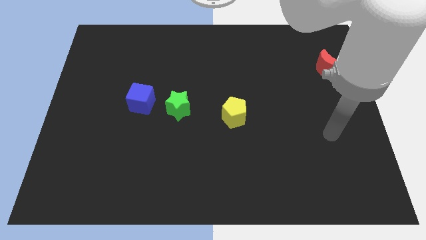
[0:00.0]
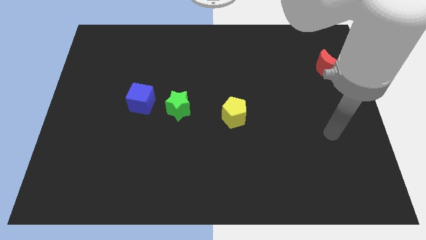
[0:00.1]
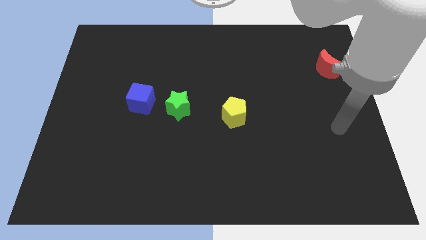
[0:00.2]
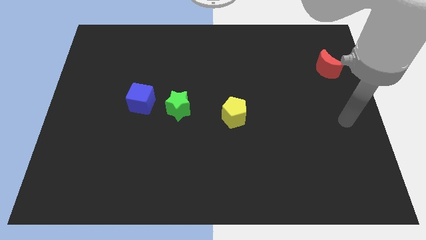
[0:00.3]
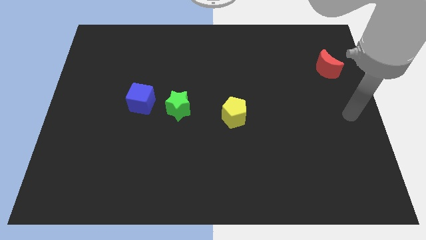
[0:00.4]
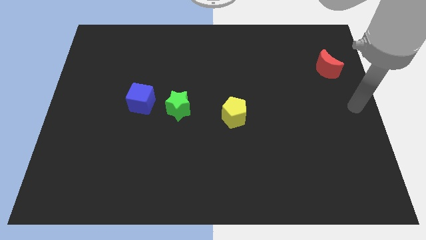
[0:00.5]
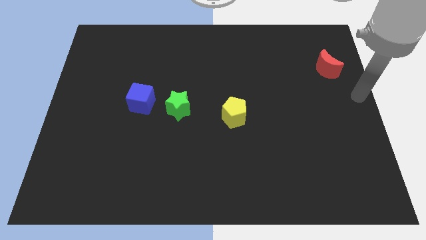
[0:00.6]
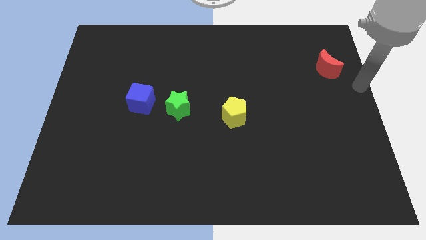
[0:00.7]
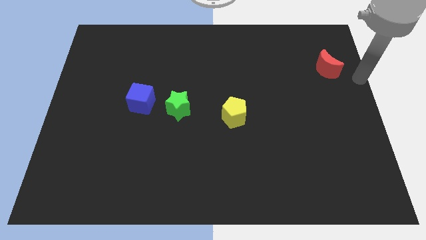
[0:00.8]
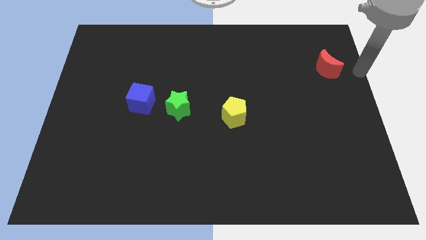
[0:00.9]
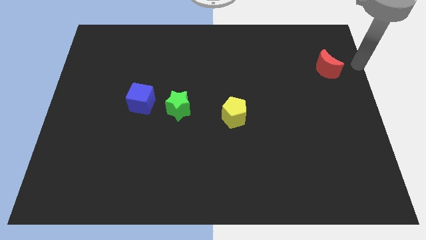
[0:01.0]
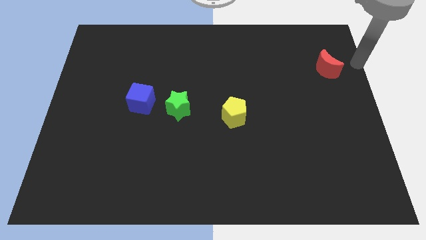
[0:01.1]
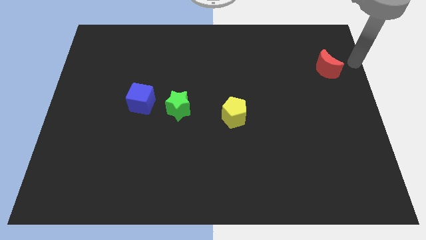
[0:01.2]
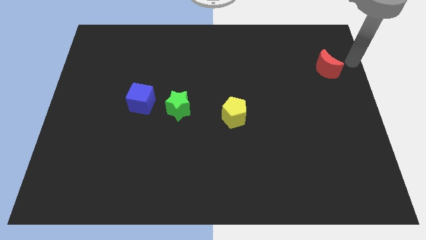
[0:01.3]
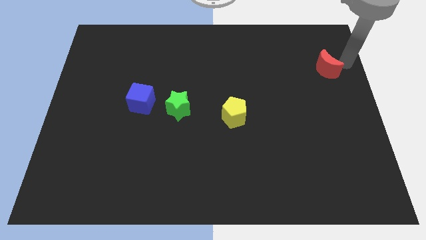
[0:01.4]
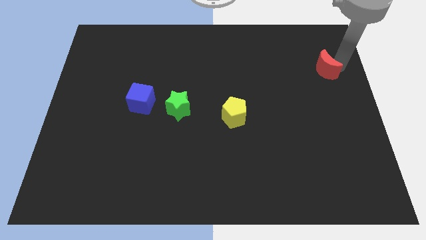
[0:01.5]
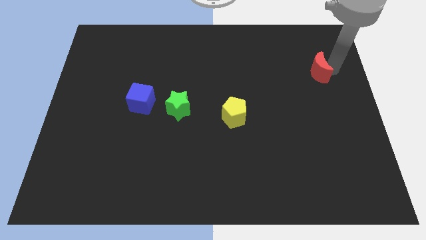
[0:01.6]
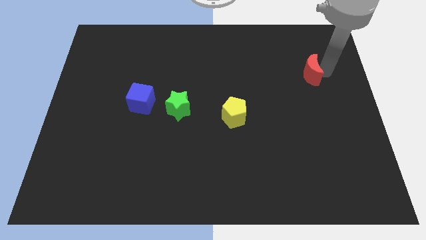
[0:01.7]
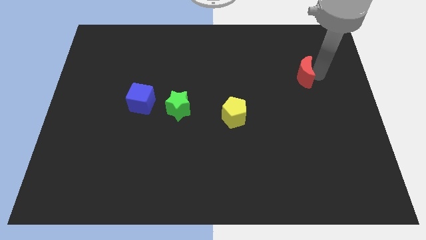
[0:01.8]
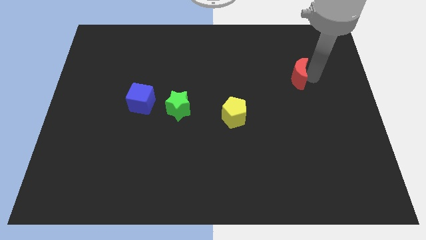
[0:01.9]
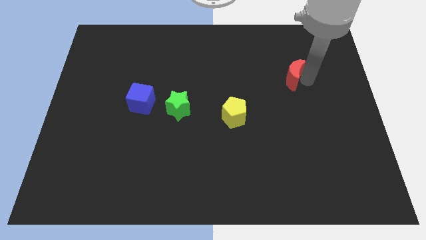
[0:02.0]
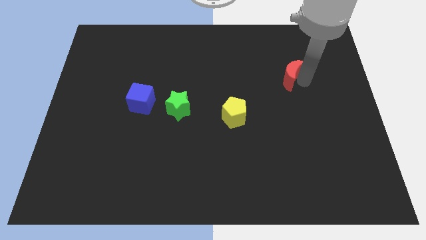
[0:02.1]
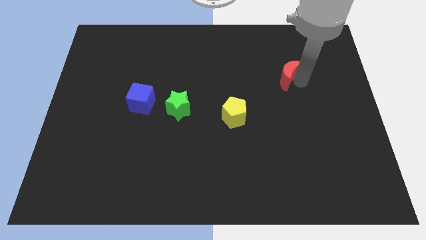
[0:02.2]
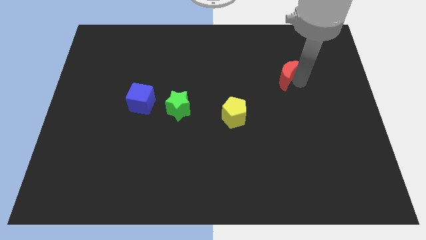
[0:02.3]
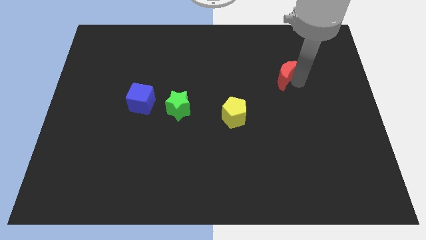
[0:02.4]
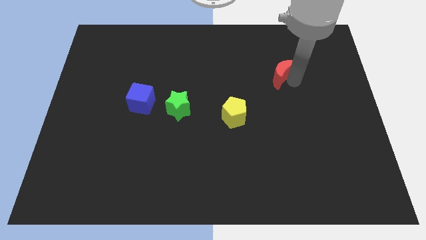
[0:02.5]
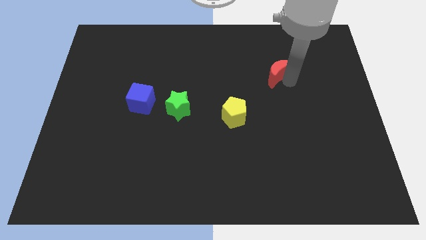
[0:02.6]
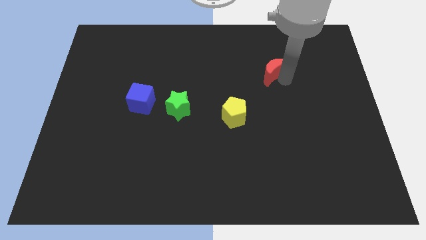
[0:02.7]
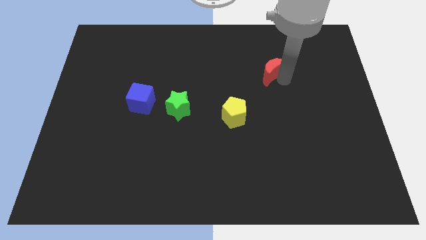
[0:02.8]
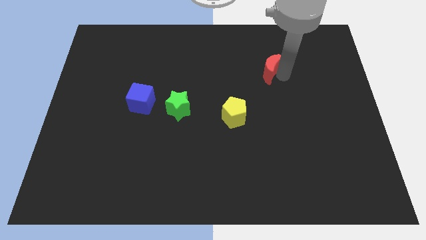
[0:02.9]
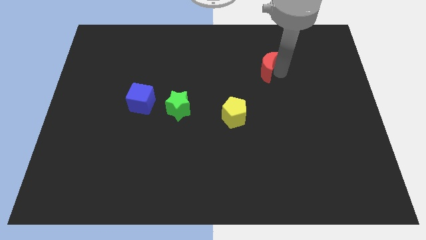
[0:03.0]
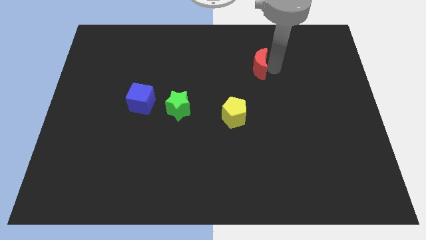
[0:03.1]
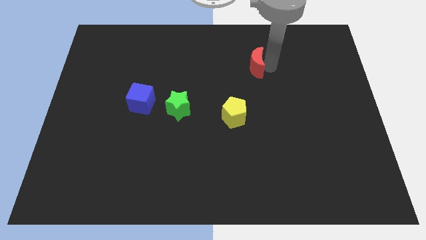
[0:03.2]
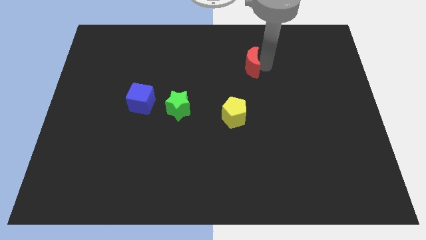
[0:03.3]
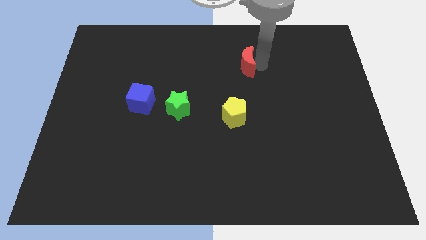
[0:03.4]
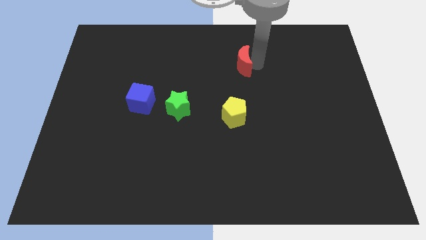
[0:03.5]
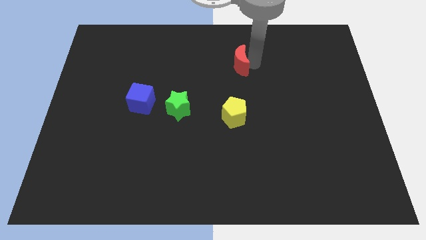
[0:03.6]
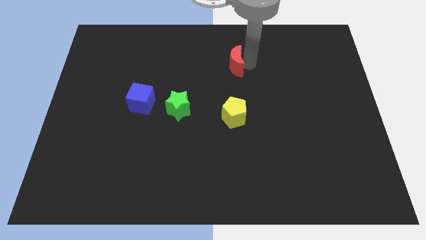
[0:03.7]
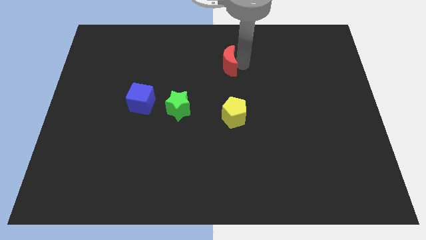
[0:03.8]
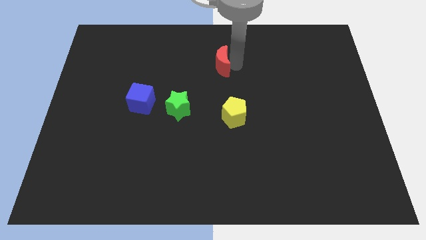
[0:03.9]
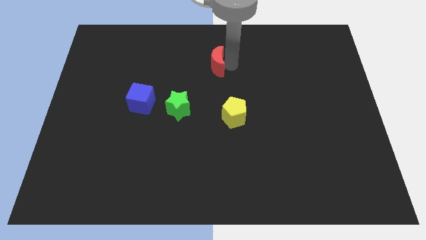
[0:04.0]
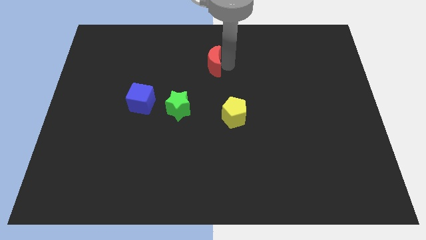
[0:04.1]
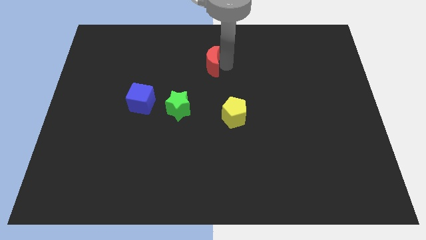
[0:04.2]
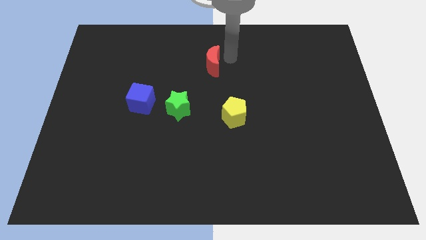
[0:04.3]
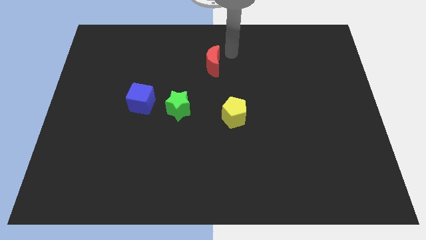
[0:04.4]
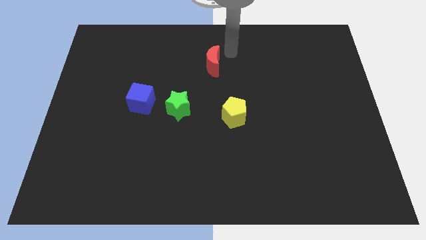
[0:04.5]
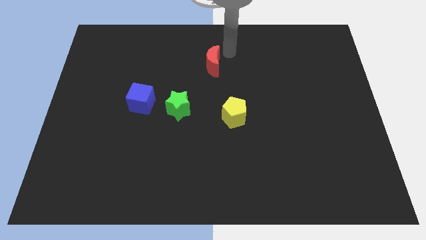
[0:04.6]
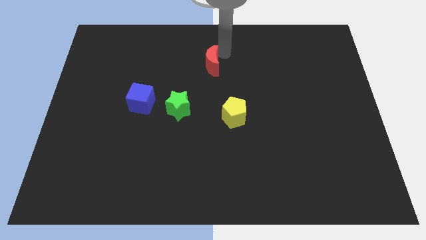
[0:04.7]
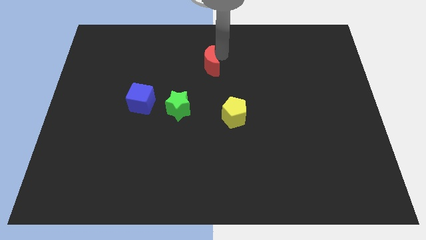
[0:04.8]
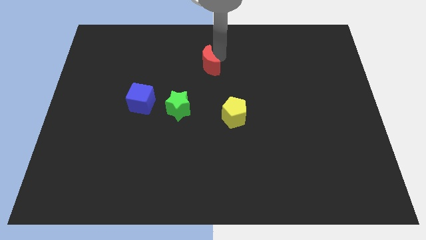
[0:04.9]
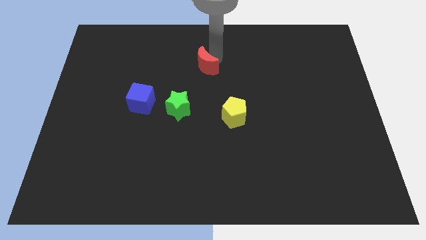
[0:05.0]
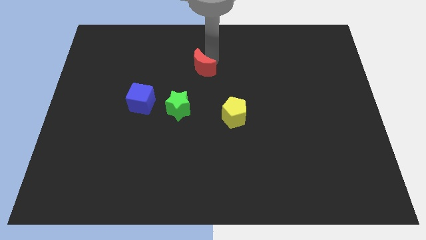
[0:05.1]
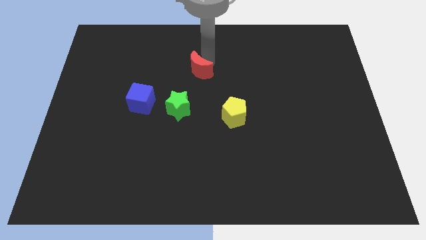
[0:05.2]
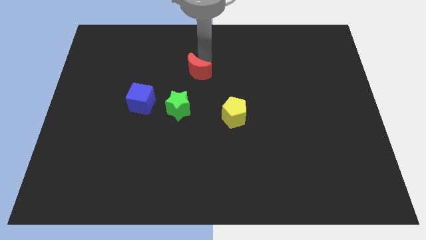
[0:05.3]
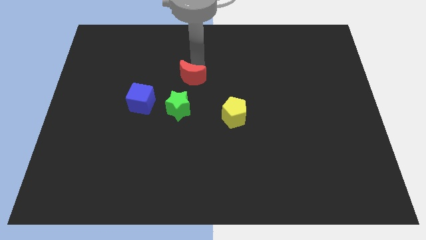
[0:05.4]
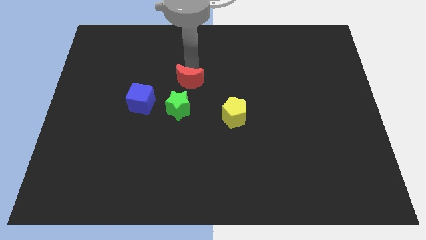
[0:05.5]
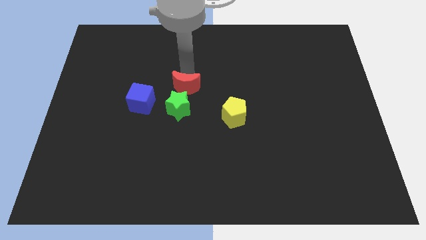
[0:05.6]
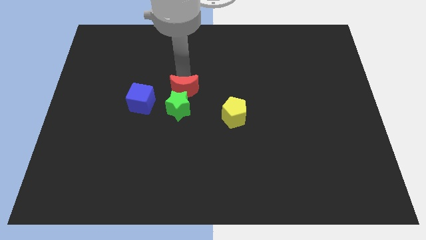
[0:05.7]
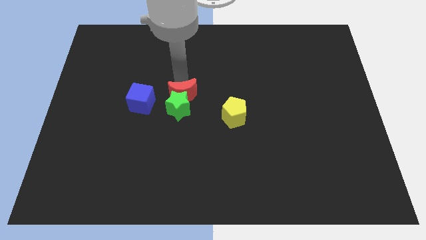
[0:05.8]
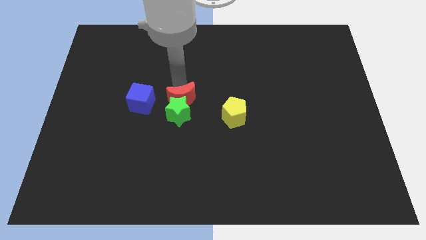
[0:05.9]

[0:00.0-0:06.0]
slide the red block towards the green block

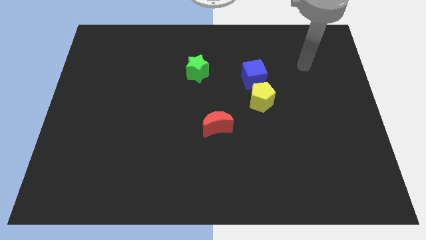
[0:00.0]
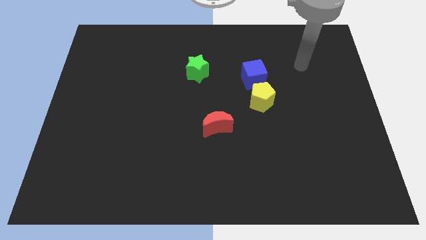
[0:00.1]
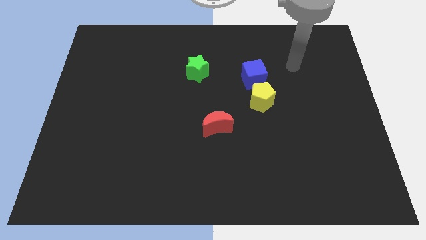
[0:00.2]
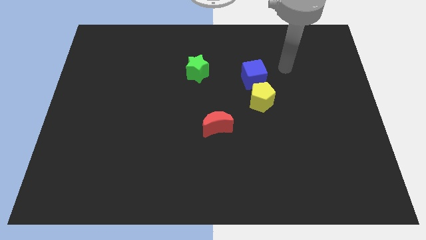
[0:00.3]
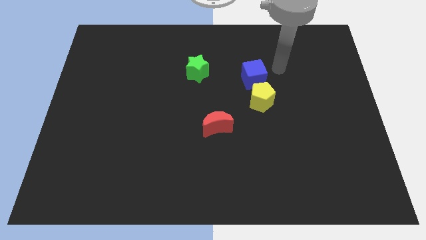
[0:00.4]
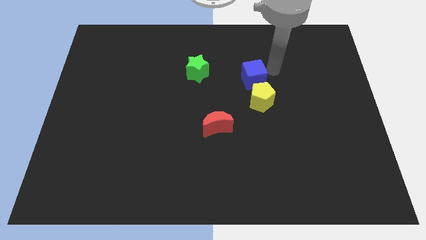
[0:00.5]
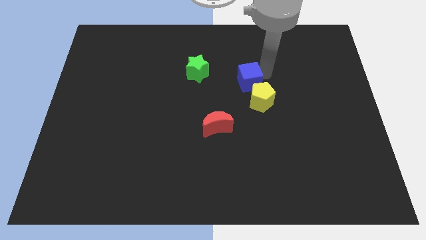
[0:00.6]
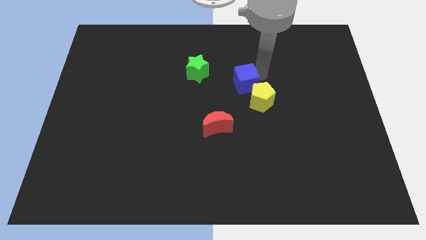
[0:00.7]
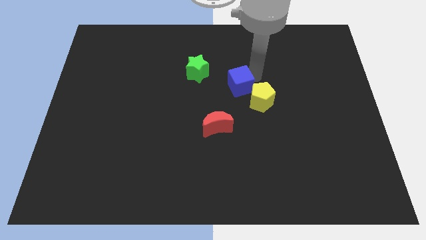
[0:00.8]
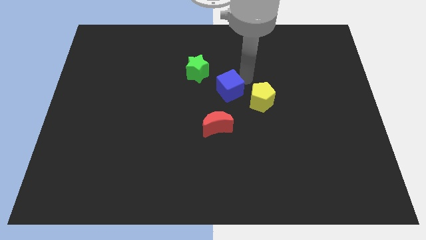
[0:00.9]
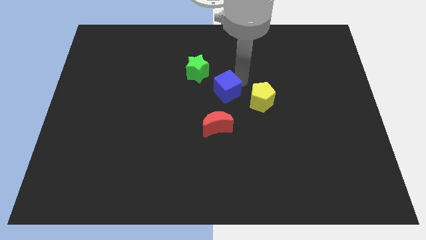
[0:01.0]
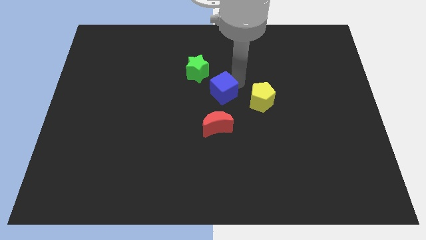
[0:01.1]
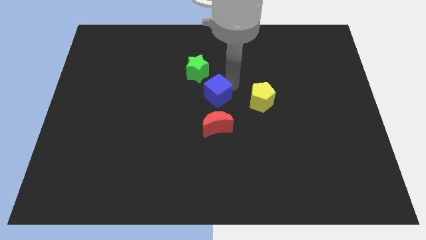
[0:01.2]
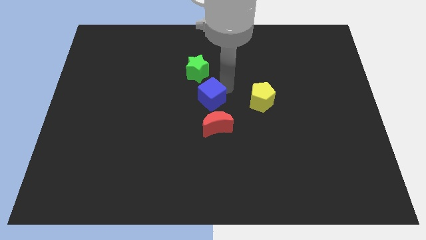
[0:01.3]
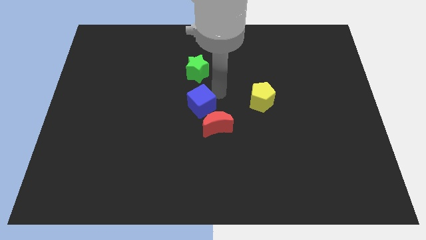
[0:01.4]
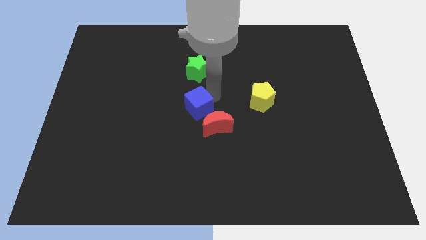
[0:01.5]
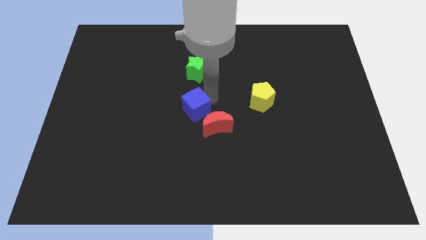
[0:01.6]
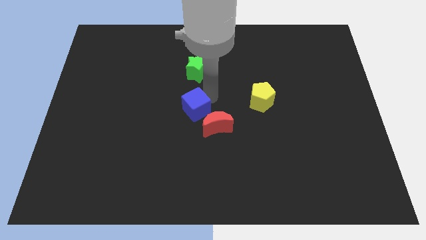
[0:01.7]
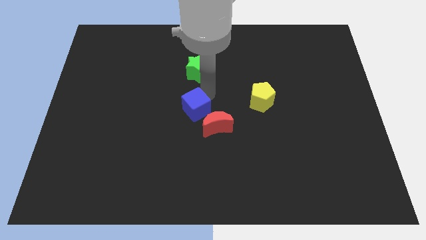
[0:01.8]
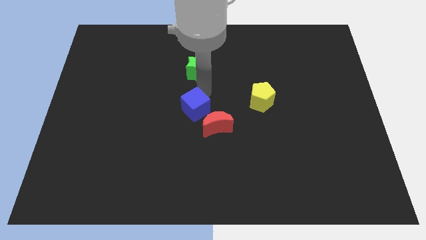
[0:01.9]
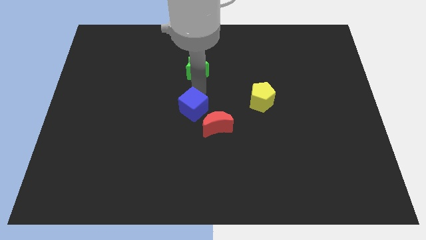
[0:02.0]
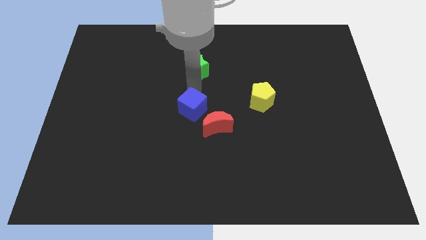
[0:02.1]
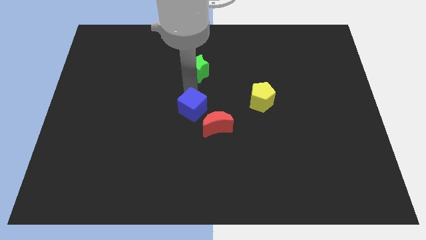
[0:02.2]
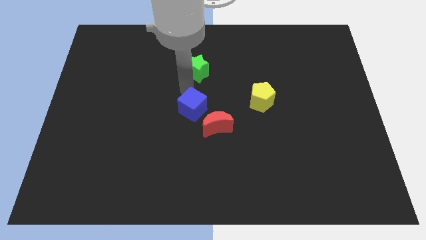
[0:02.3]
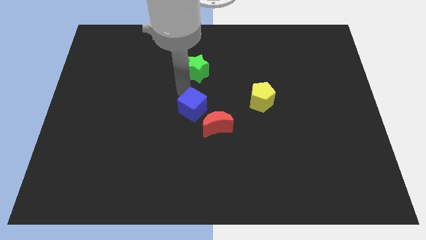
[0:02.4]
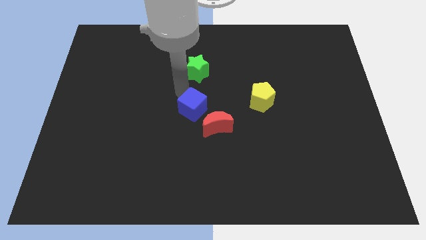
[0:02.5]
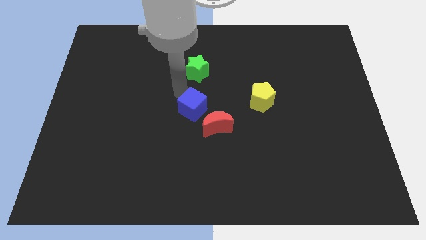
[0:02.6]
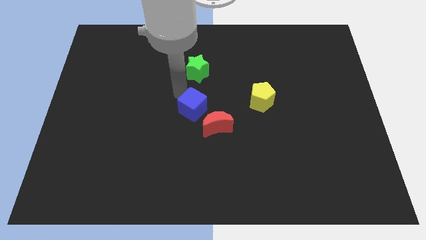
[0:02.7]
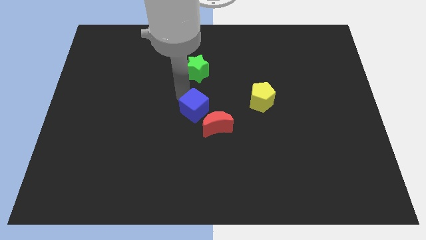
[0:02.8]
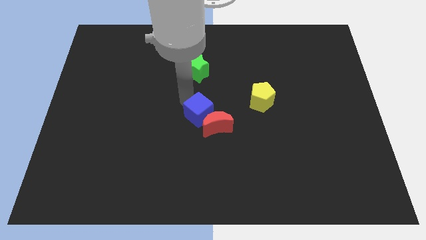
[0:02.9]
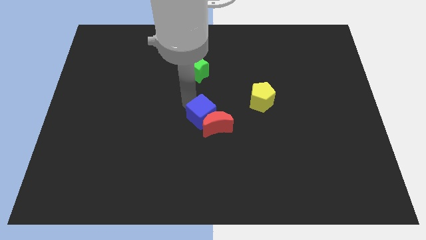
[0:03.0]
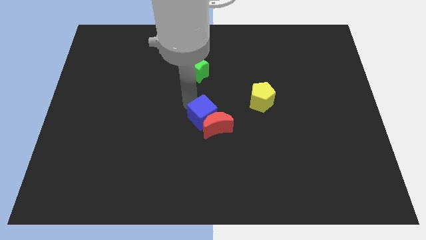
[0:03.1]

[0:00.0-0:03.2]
put the blue block next to the moon

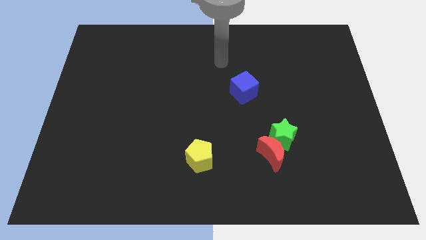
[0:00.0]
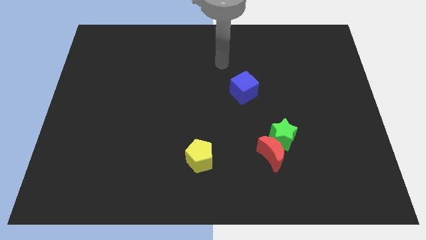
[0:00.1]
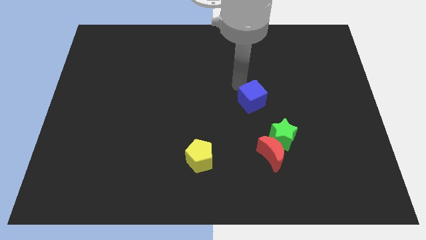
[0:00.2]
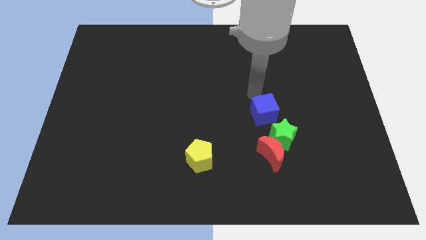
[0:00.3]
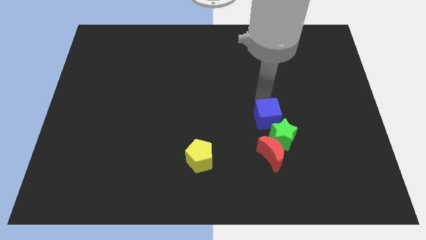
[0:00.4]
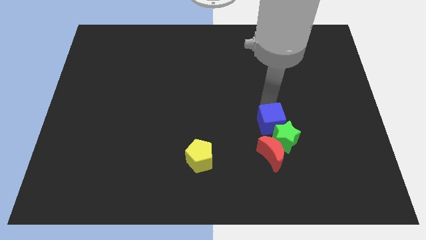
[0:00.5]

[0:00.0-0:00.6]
move the blue cube towards the green star
